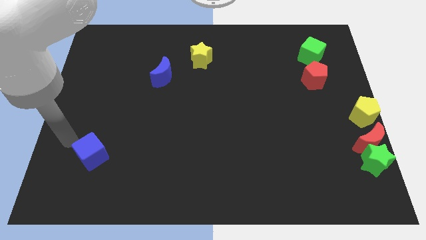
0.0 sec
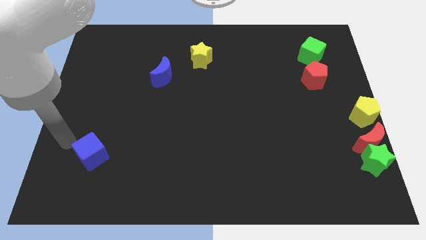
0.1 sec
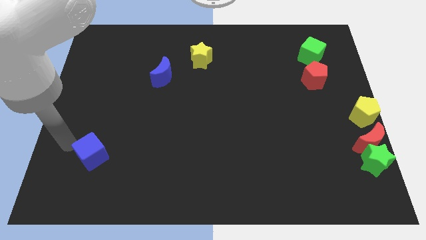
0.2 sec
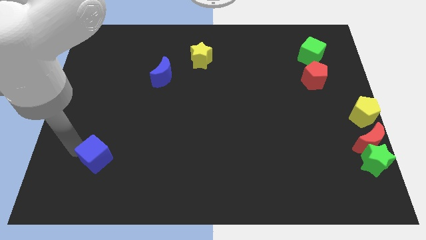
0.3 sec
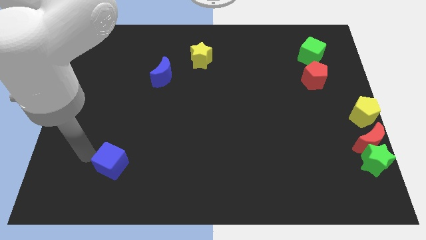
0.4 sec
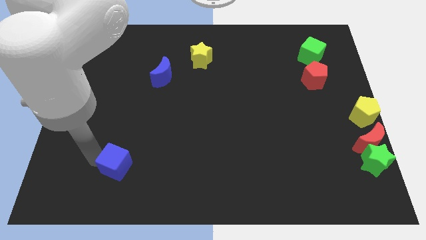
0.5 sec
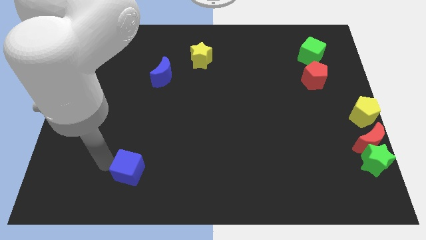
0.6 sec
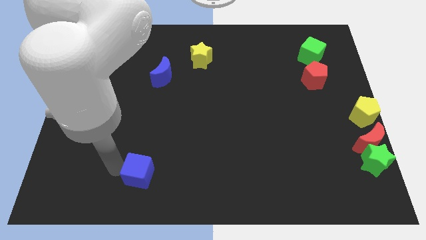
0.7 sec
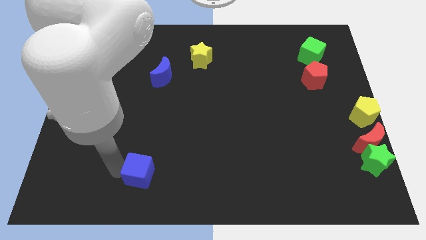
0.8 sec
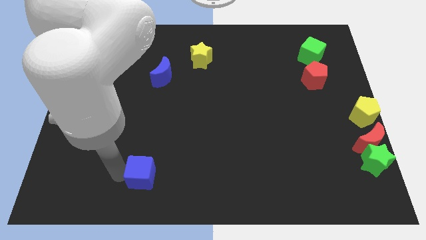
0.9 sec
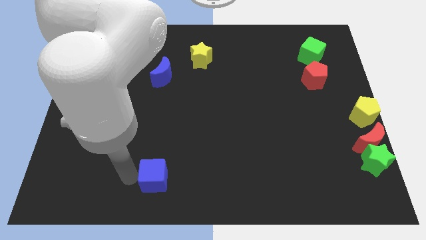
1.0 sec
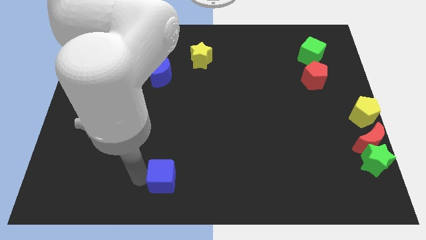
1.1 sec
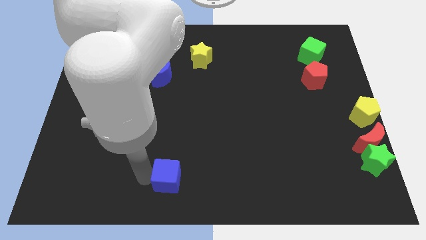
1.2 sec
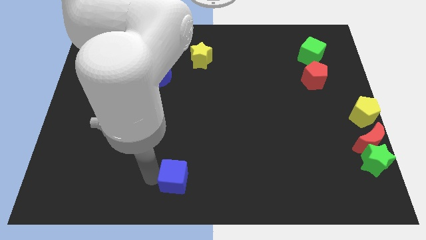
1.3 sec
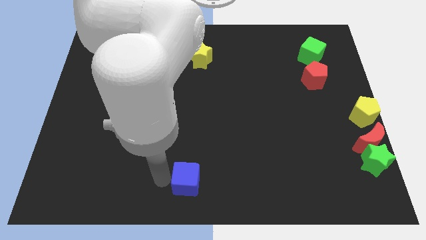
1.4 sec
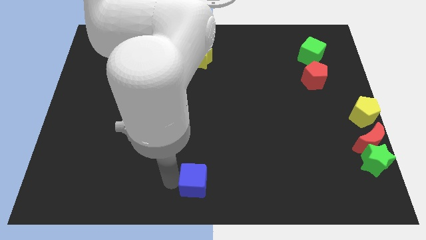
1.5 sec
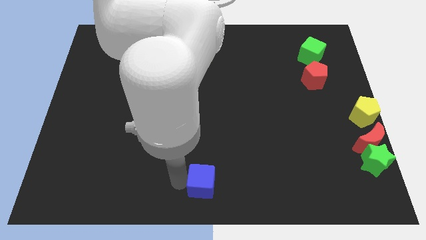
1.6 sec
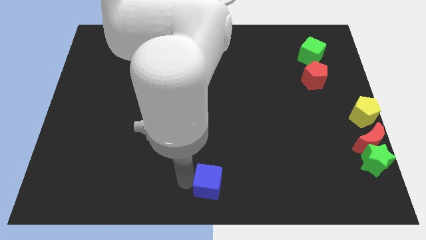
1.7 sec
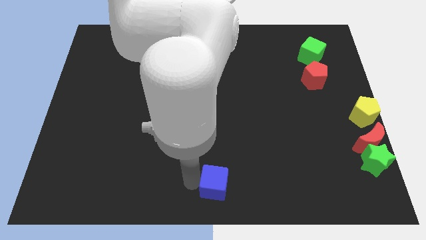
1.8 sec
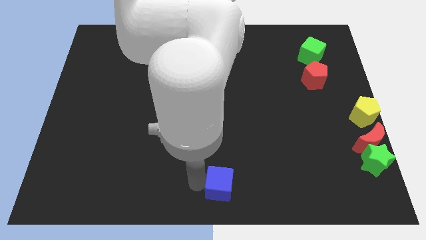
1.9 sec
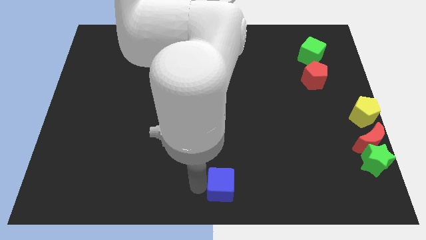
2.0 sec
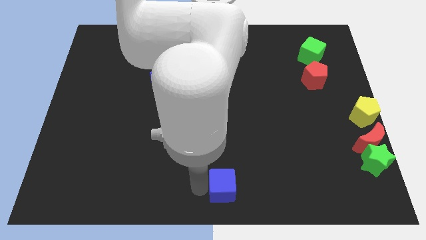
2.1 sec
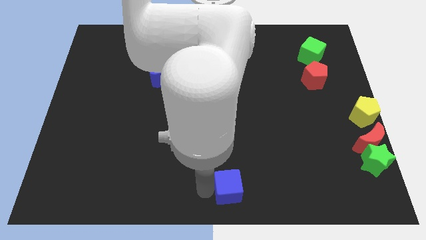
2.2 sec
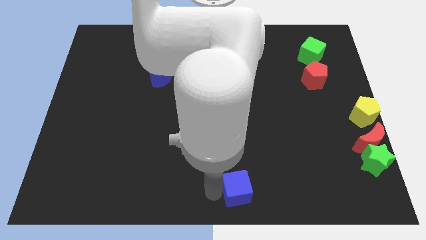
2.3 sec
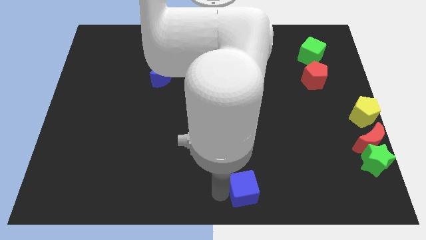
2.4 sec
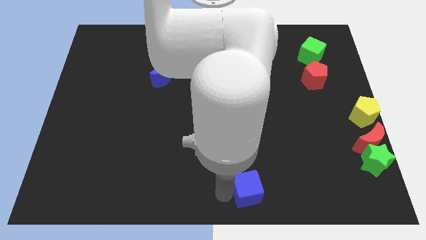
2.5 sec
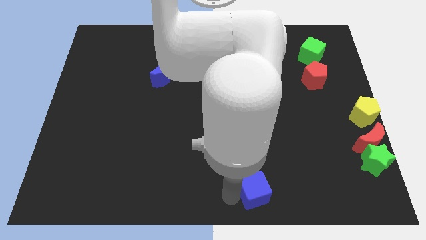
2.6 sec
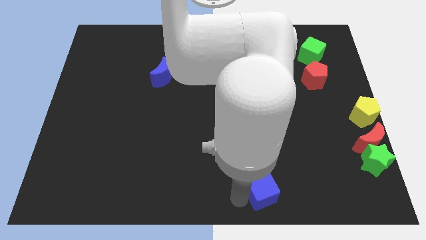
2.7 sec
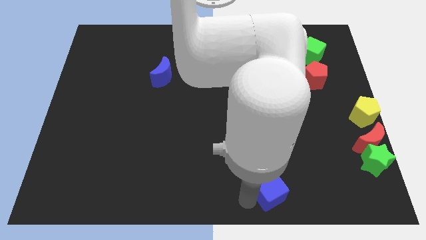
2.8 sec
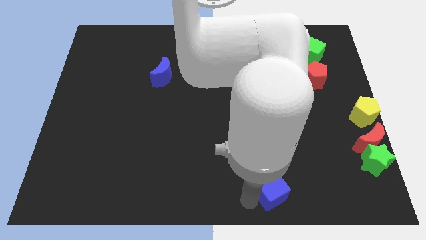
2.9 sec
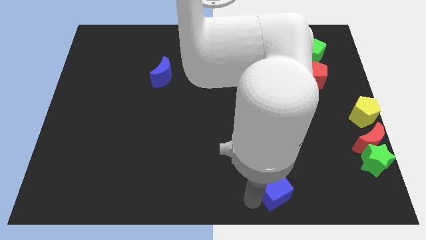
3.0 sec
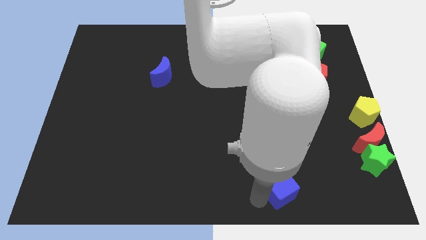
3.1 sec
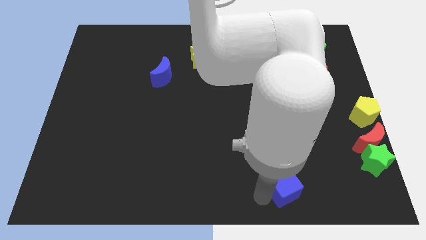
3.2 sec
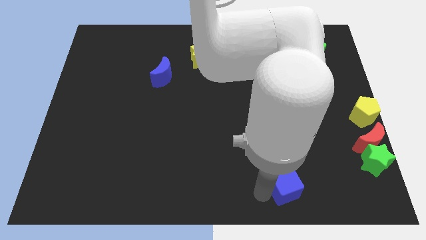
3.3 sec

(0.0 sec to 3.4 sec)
move blue cube slightly right

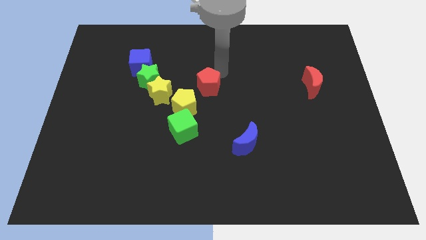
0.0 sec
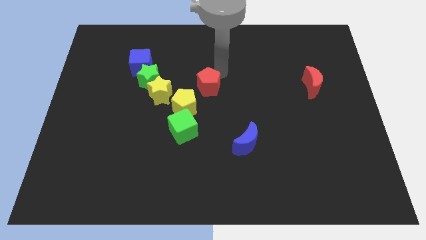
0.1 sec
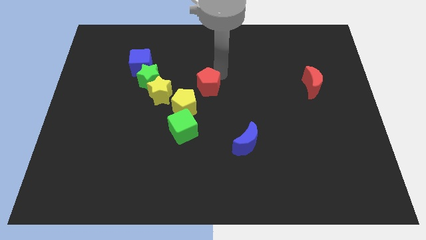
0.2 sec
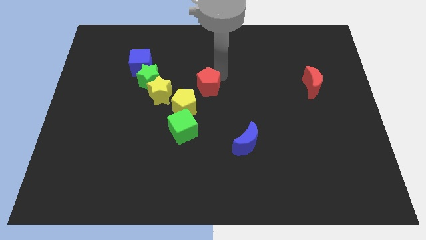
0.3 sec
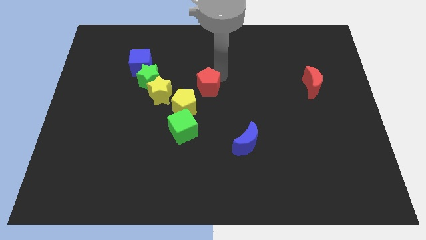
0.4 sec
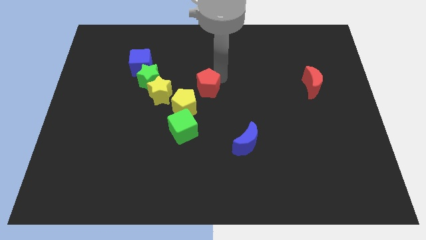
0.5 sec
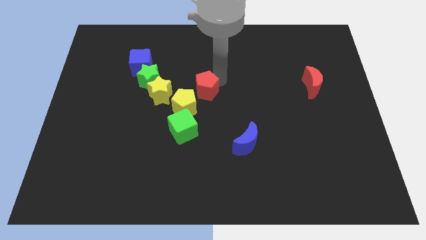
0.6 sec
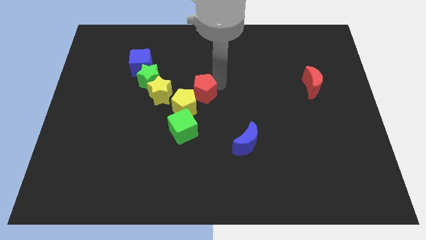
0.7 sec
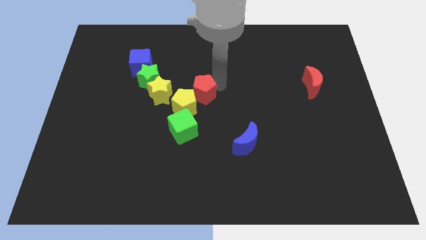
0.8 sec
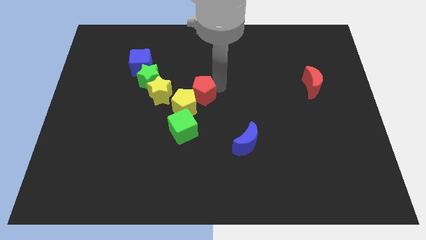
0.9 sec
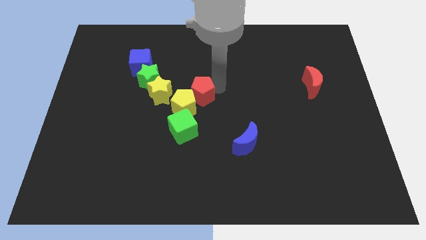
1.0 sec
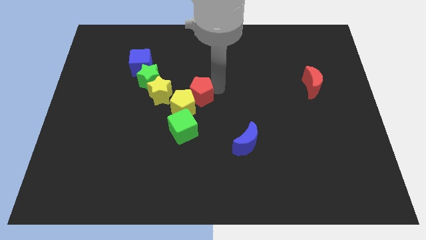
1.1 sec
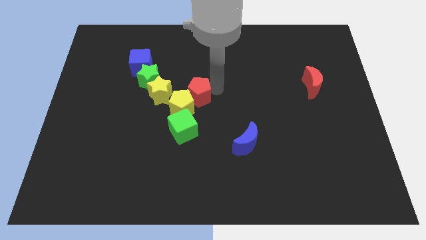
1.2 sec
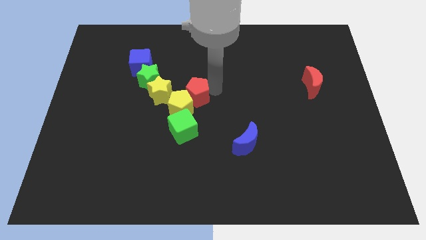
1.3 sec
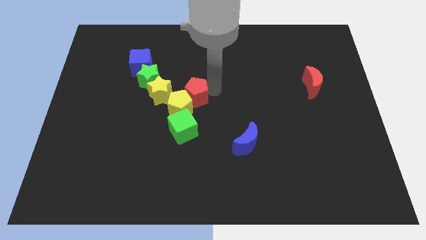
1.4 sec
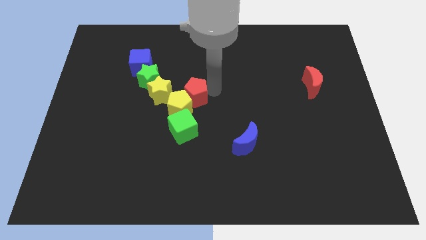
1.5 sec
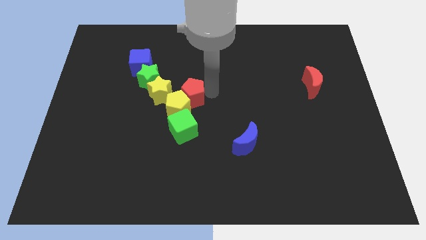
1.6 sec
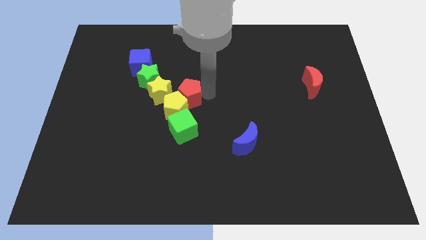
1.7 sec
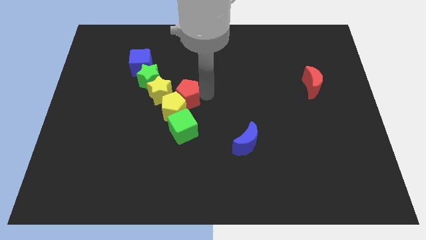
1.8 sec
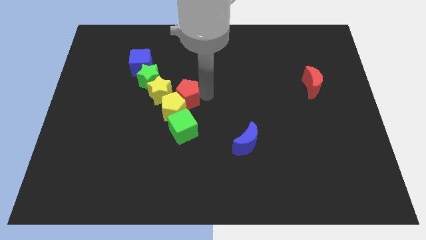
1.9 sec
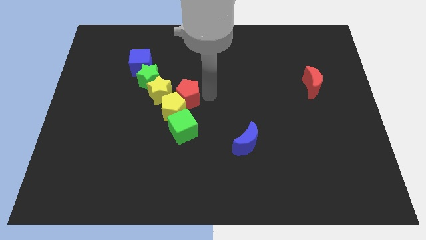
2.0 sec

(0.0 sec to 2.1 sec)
push the red pentagon into the yellow pentagon

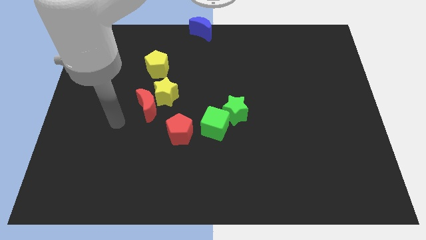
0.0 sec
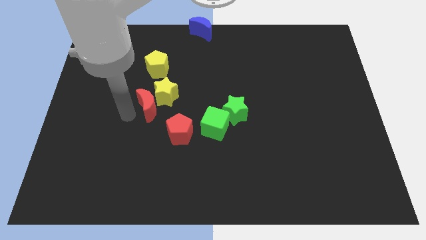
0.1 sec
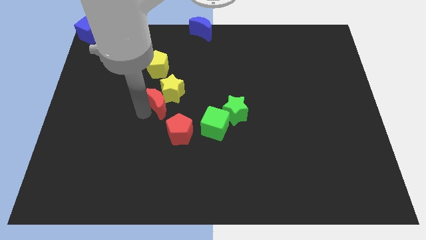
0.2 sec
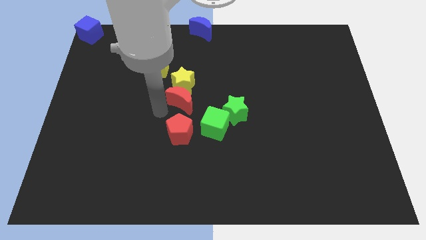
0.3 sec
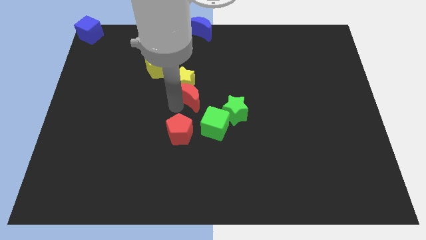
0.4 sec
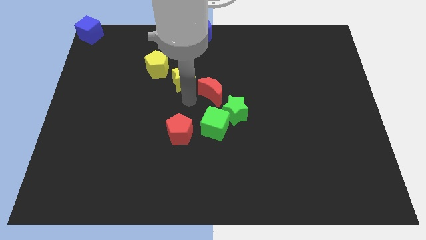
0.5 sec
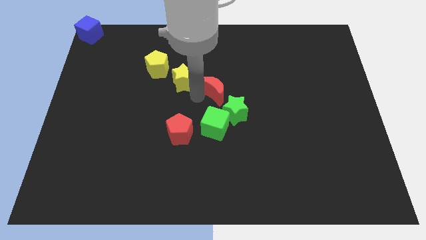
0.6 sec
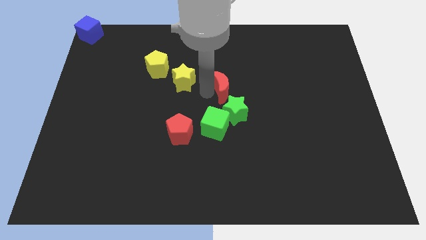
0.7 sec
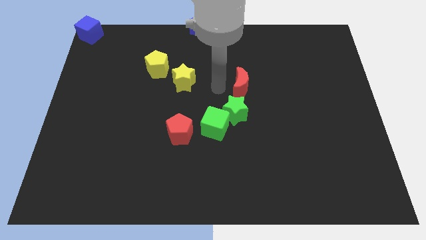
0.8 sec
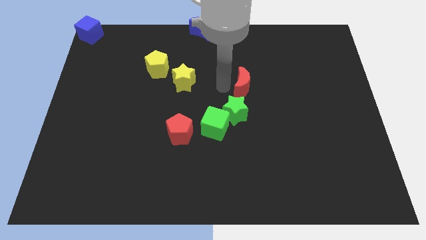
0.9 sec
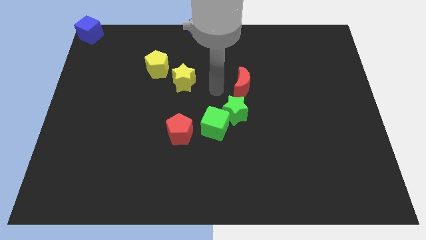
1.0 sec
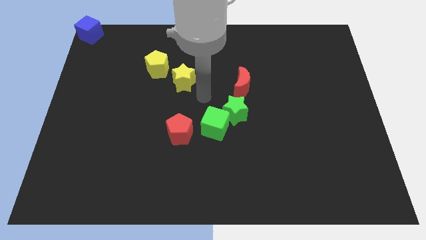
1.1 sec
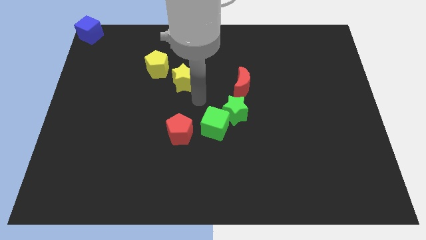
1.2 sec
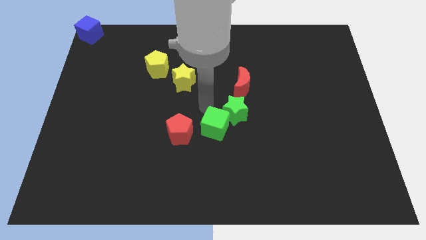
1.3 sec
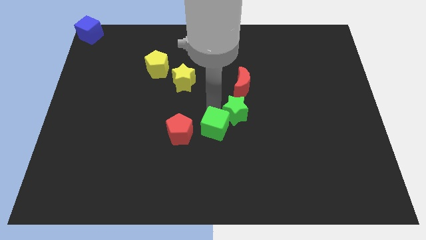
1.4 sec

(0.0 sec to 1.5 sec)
separate the red moon and the yellow star

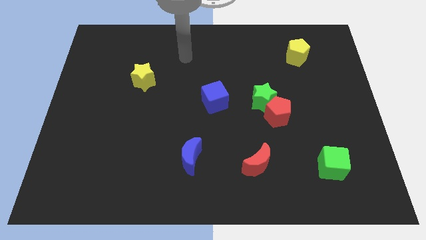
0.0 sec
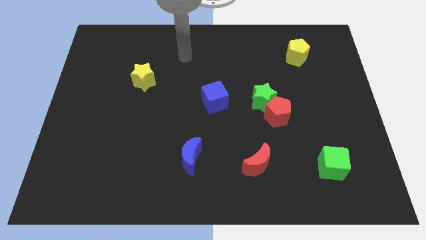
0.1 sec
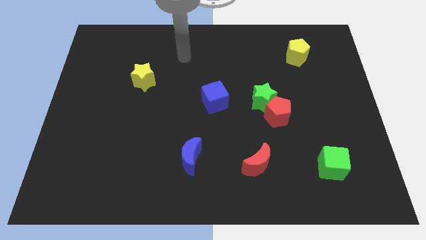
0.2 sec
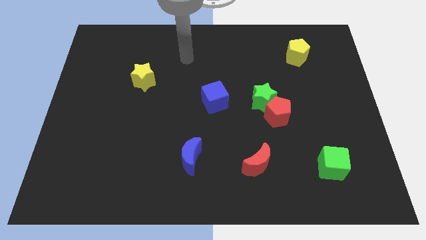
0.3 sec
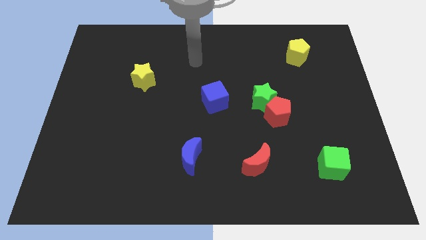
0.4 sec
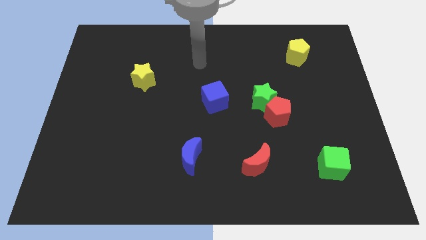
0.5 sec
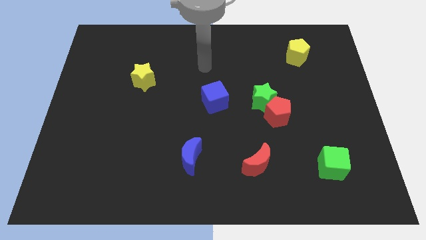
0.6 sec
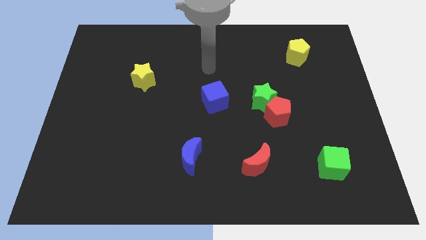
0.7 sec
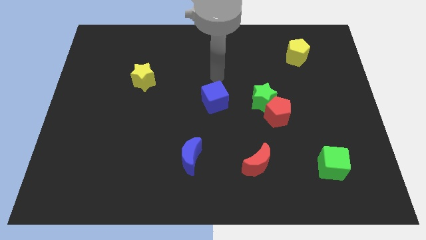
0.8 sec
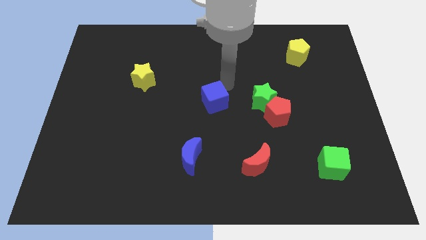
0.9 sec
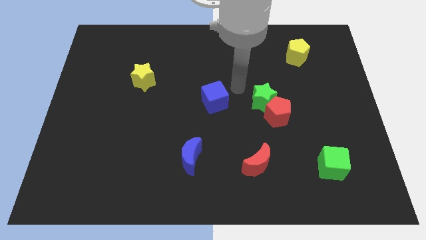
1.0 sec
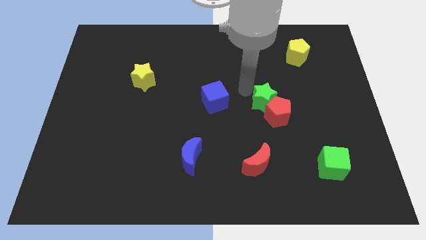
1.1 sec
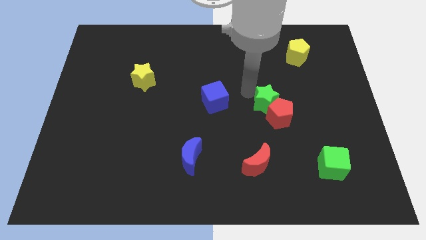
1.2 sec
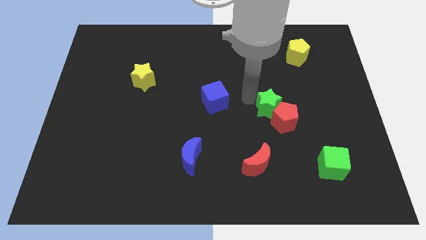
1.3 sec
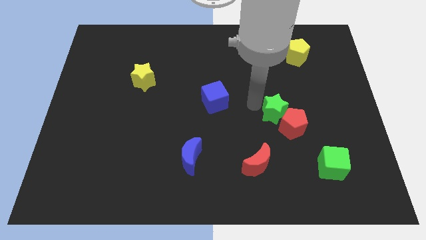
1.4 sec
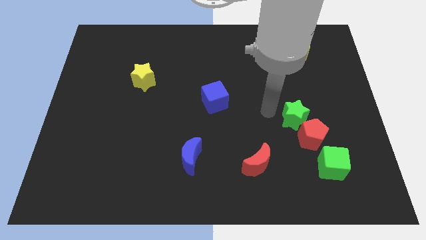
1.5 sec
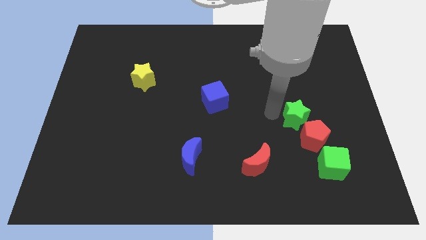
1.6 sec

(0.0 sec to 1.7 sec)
move the green star along with red pentagon to the top left to the green cube

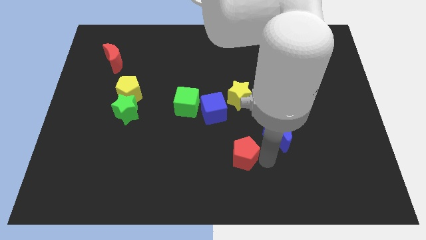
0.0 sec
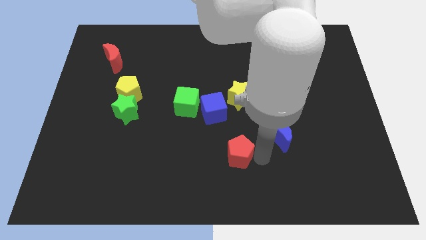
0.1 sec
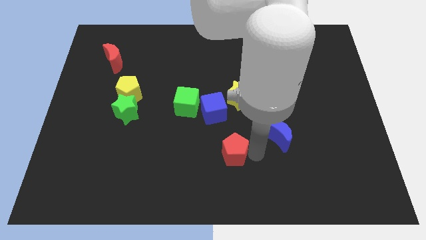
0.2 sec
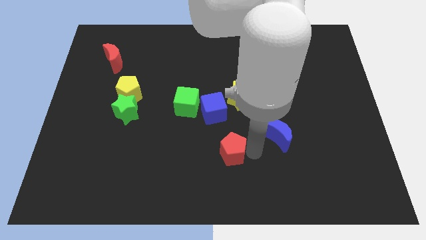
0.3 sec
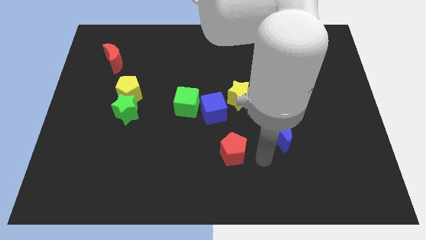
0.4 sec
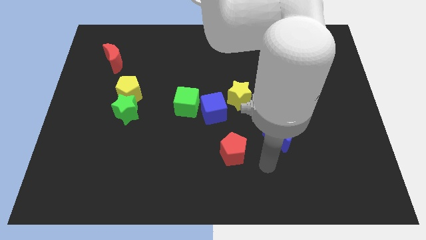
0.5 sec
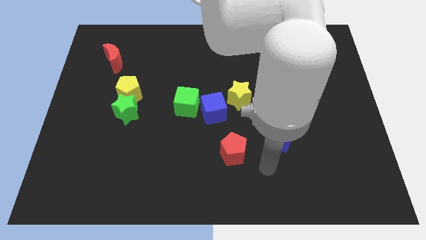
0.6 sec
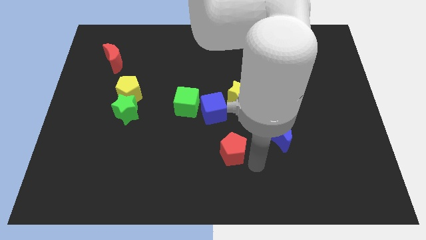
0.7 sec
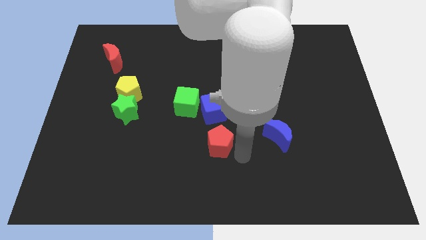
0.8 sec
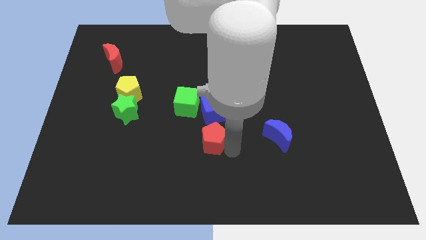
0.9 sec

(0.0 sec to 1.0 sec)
place red pentagon below blue cube
